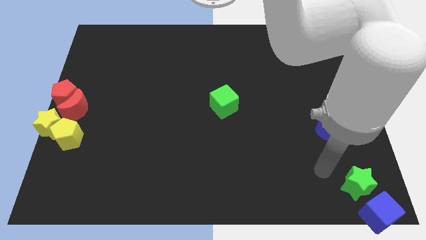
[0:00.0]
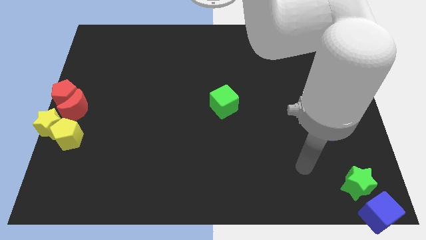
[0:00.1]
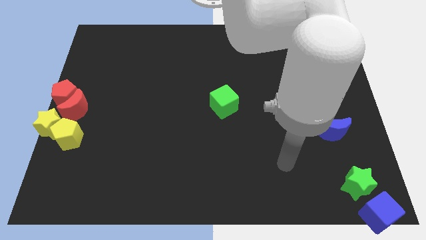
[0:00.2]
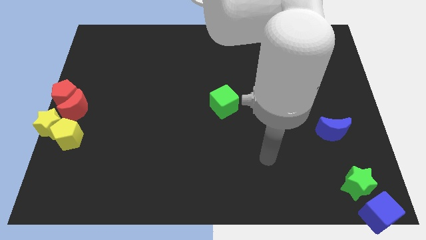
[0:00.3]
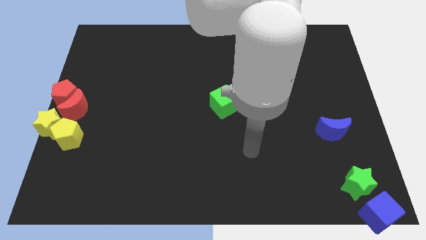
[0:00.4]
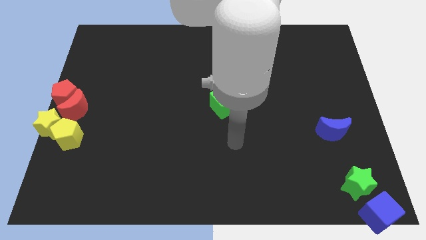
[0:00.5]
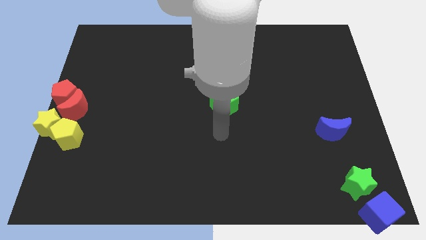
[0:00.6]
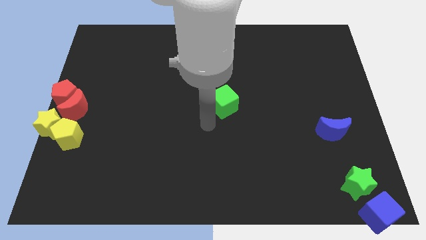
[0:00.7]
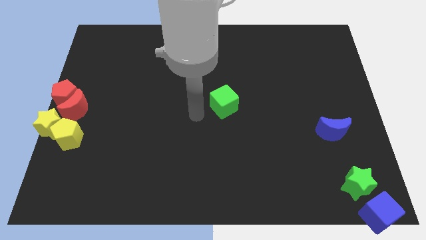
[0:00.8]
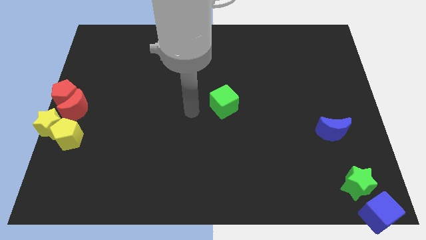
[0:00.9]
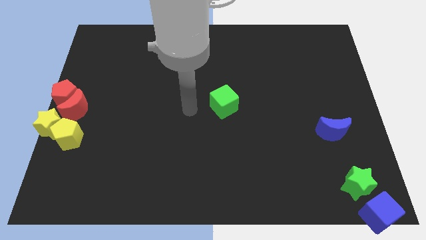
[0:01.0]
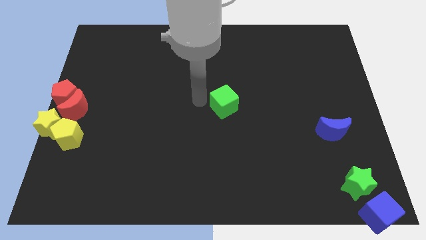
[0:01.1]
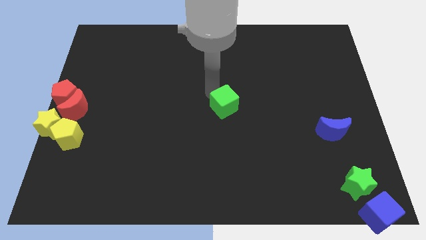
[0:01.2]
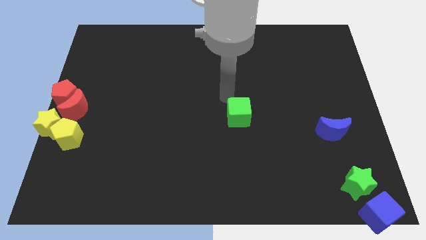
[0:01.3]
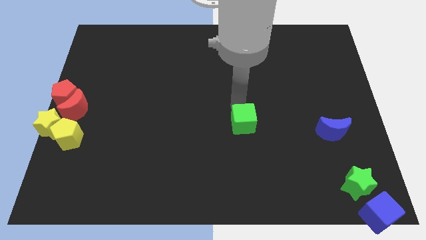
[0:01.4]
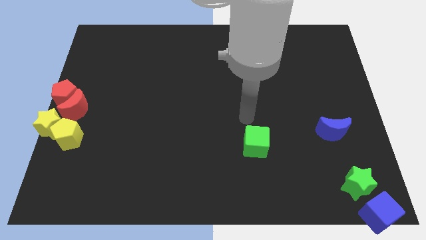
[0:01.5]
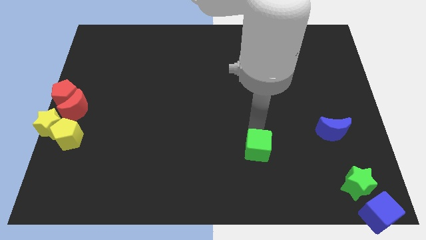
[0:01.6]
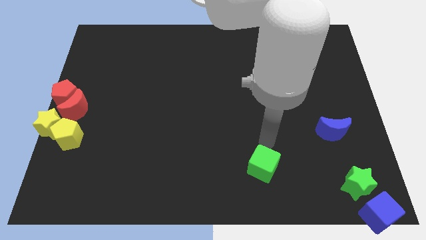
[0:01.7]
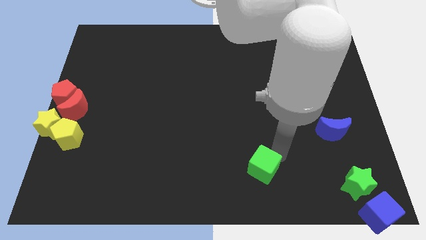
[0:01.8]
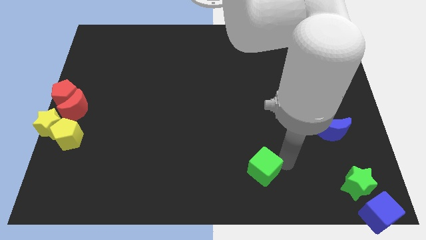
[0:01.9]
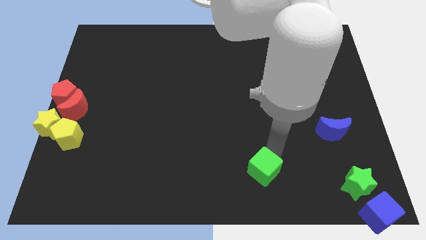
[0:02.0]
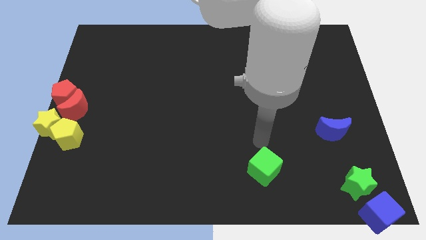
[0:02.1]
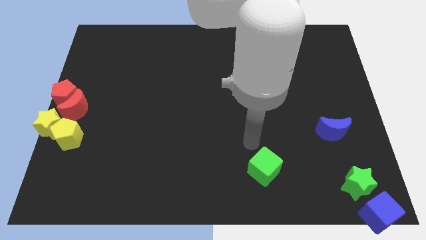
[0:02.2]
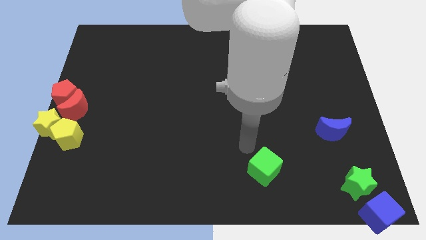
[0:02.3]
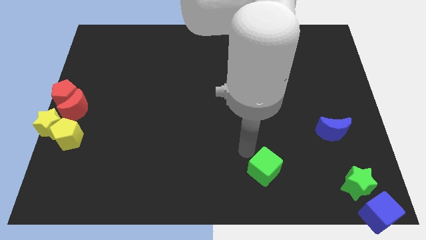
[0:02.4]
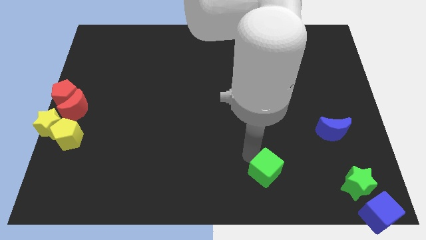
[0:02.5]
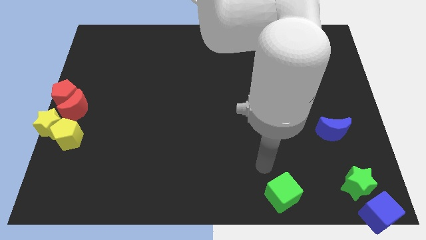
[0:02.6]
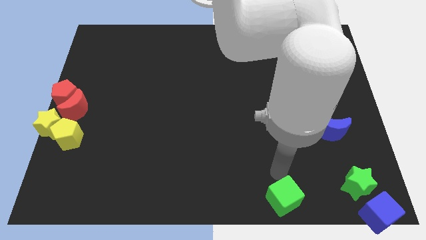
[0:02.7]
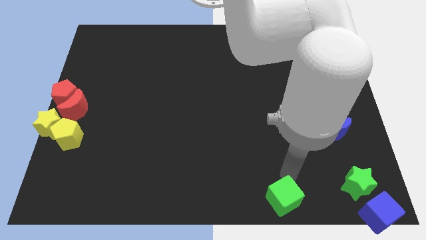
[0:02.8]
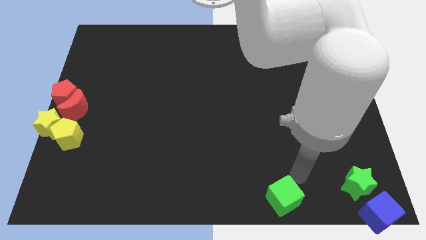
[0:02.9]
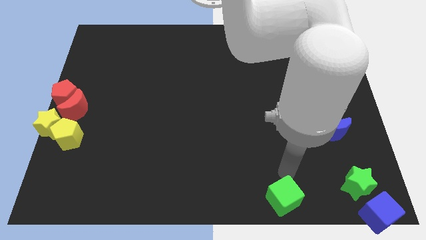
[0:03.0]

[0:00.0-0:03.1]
place the green cube to the left of the blue cube

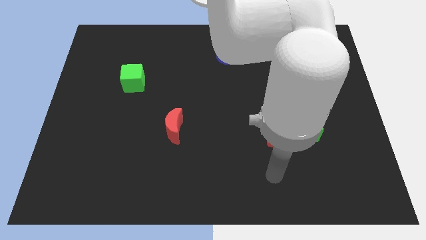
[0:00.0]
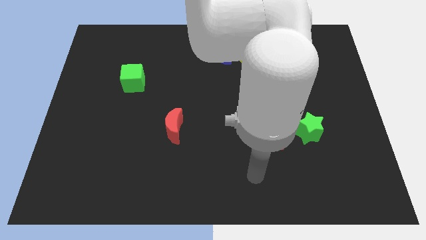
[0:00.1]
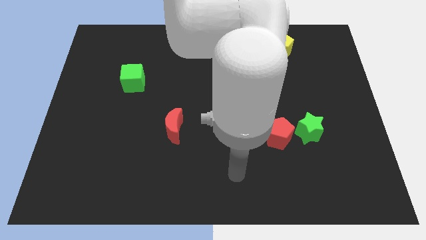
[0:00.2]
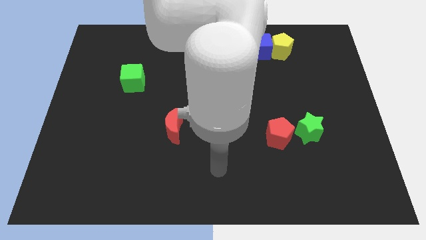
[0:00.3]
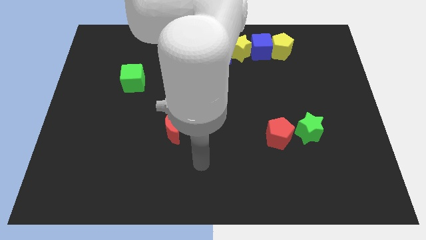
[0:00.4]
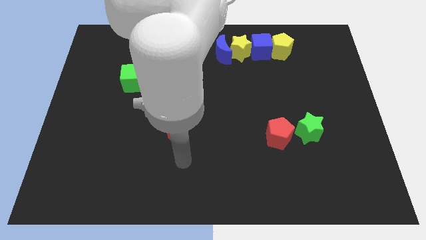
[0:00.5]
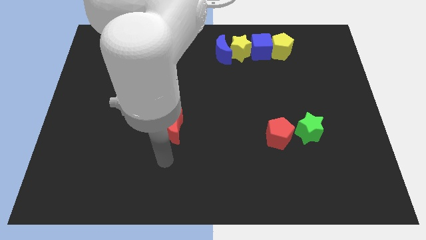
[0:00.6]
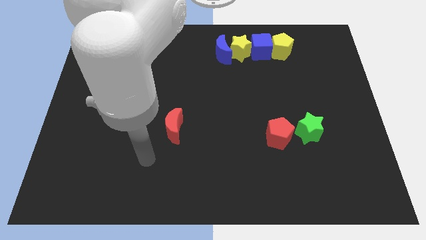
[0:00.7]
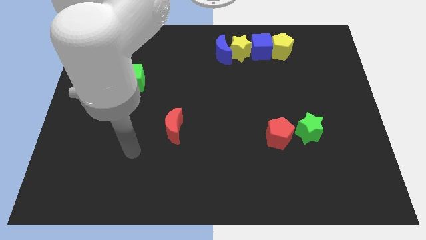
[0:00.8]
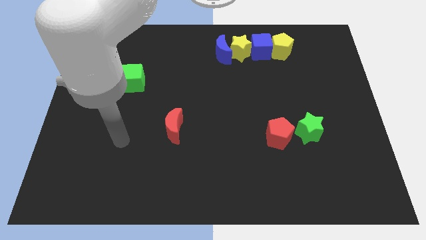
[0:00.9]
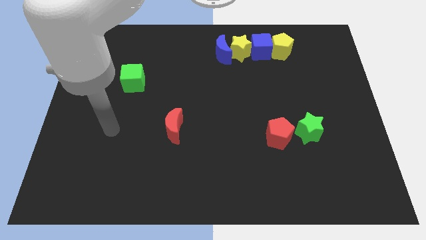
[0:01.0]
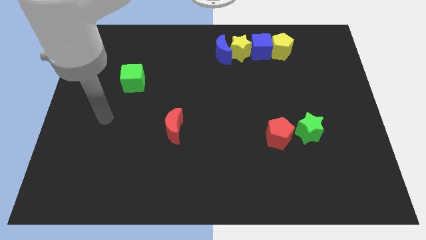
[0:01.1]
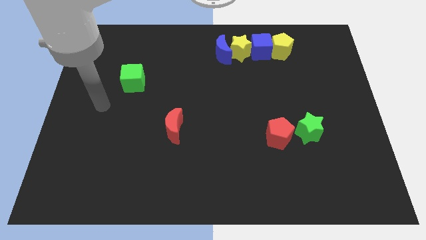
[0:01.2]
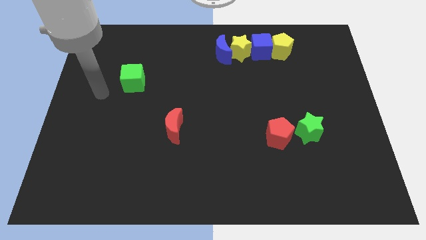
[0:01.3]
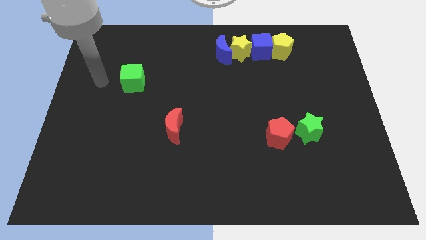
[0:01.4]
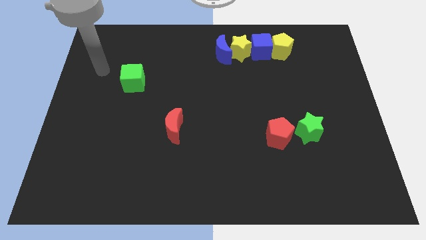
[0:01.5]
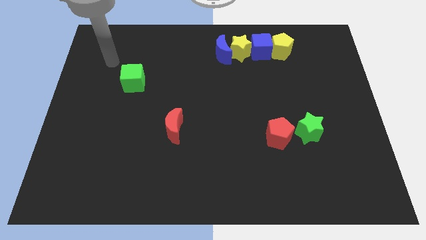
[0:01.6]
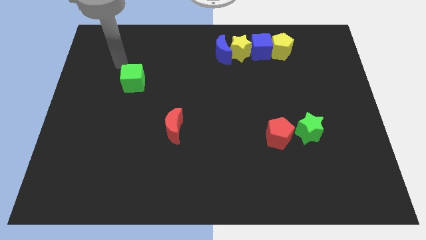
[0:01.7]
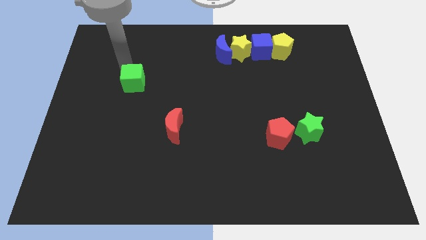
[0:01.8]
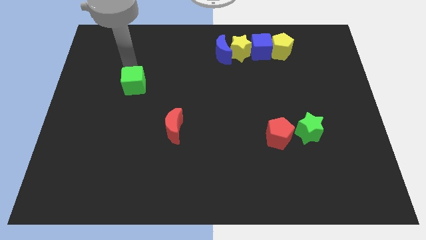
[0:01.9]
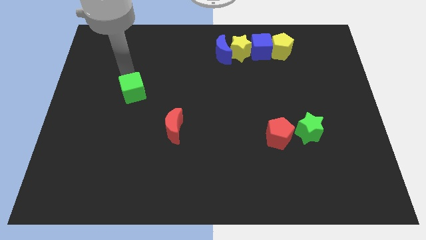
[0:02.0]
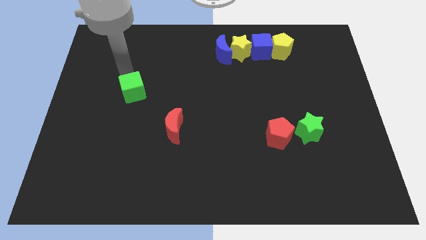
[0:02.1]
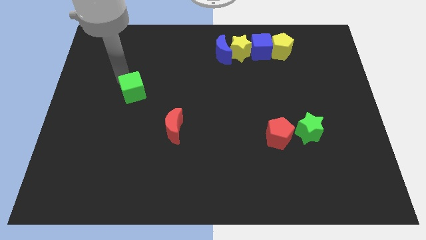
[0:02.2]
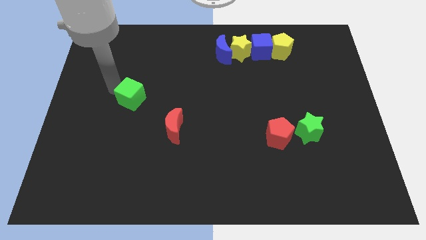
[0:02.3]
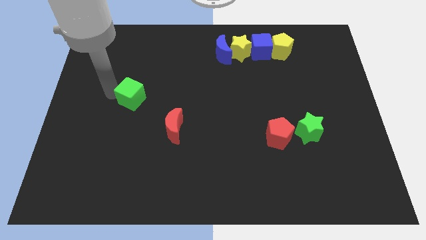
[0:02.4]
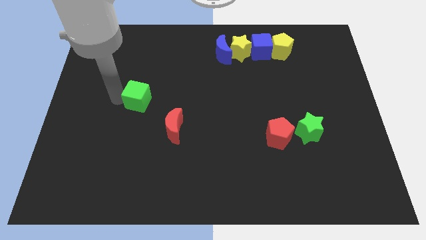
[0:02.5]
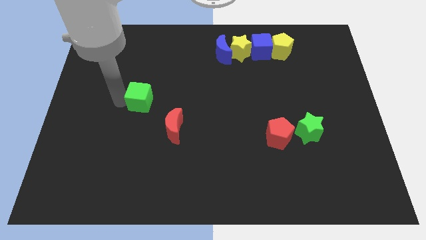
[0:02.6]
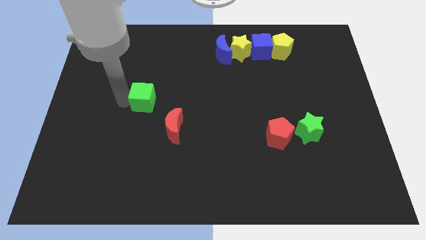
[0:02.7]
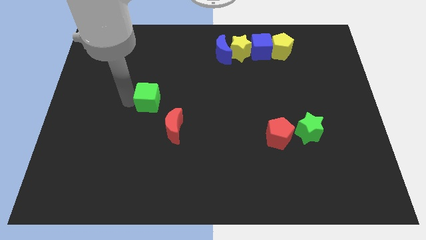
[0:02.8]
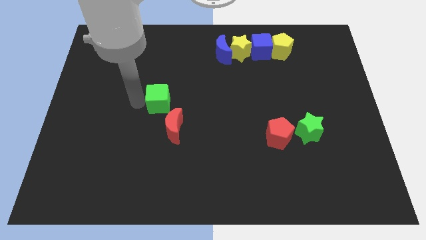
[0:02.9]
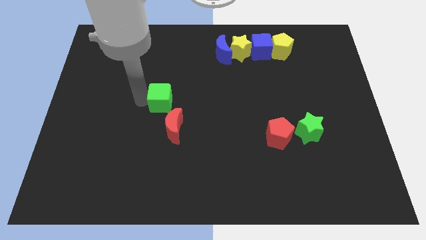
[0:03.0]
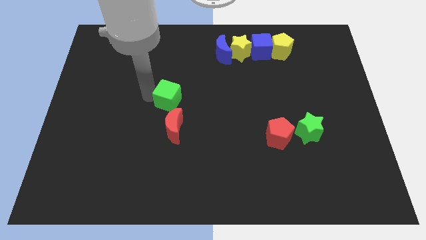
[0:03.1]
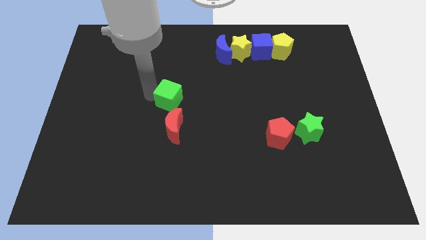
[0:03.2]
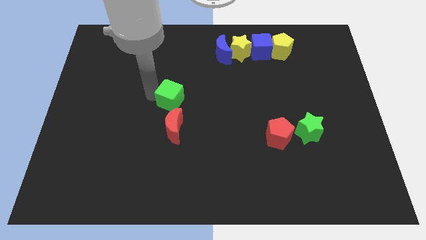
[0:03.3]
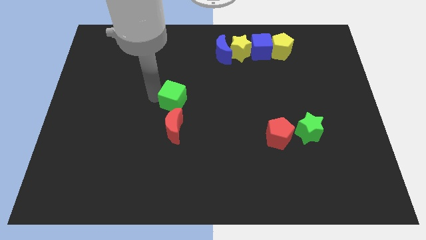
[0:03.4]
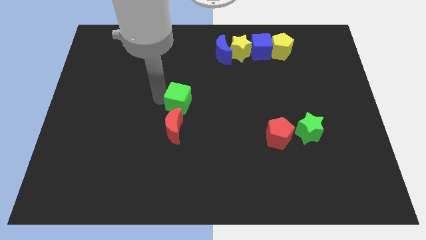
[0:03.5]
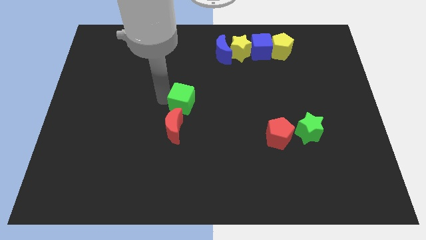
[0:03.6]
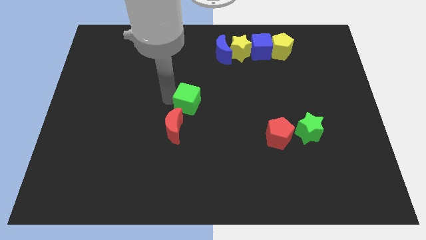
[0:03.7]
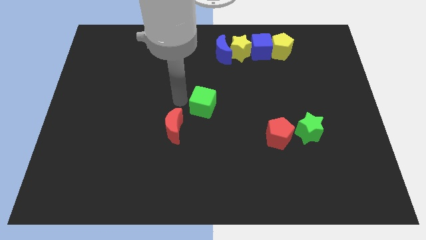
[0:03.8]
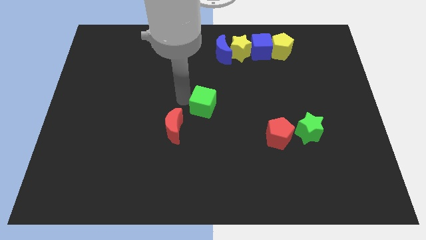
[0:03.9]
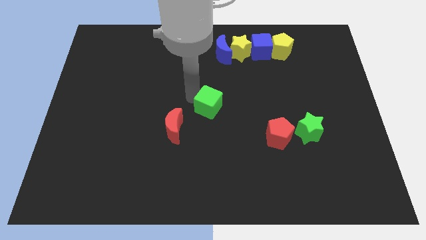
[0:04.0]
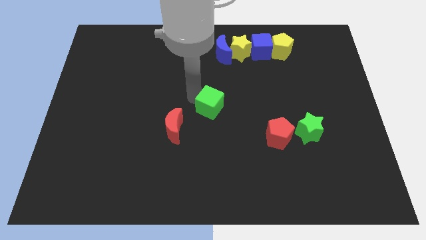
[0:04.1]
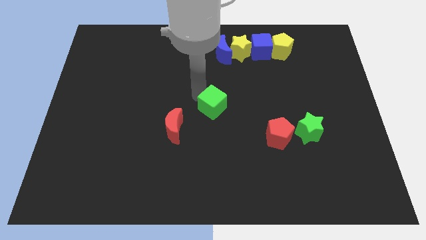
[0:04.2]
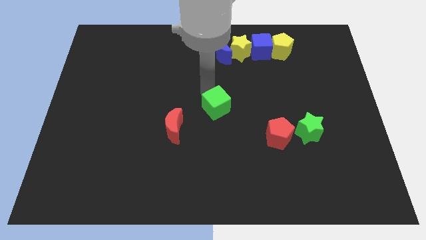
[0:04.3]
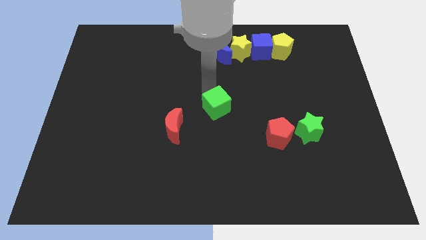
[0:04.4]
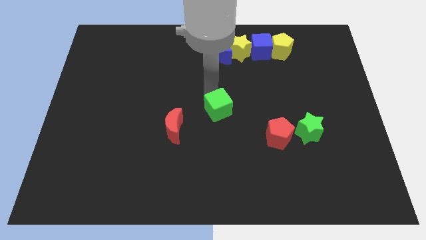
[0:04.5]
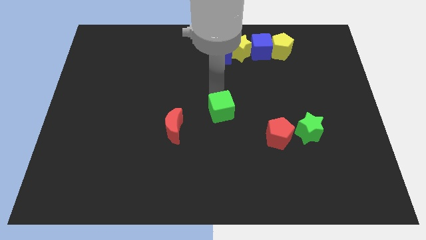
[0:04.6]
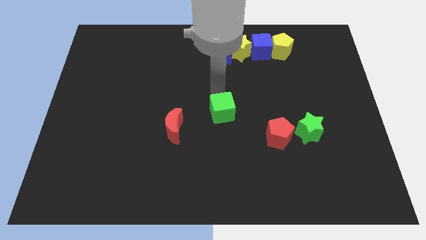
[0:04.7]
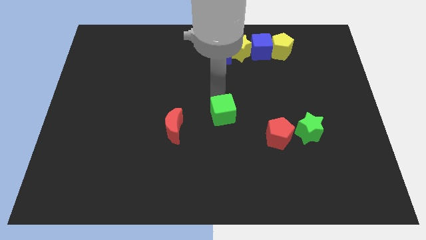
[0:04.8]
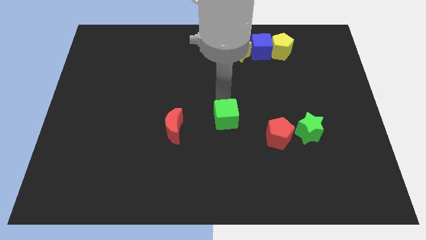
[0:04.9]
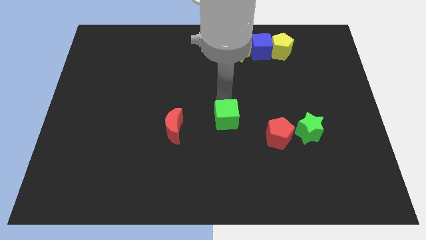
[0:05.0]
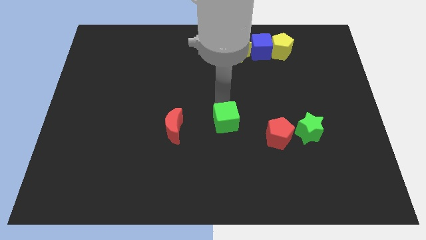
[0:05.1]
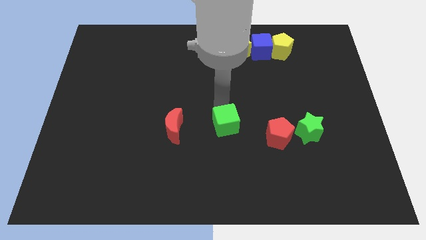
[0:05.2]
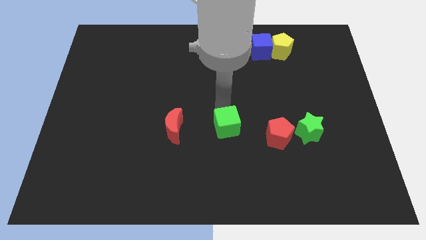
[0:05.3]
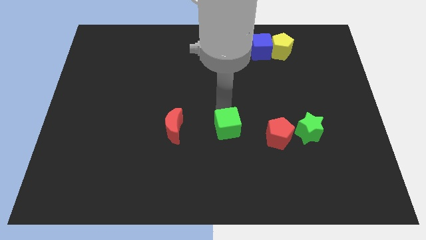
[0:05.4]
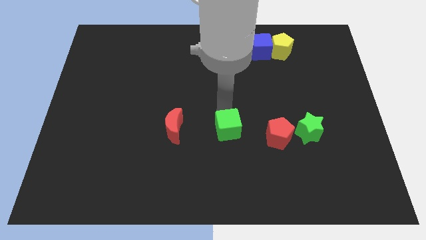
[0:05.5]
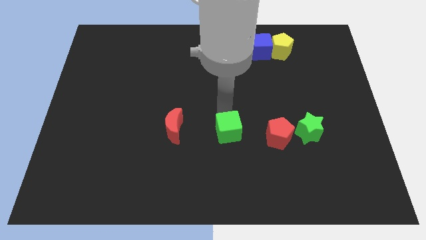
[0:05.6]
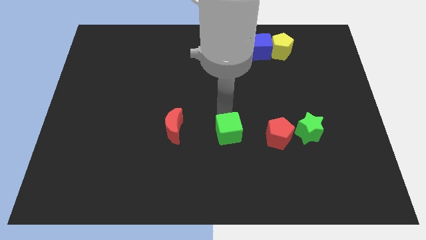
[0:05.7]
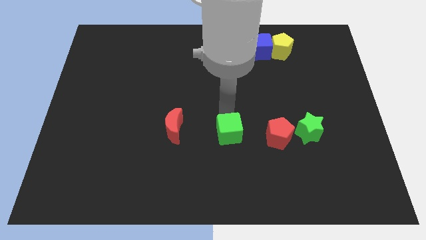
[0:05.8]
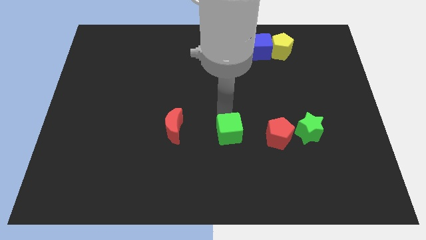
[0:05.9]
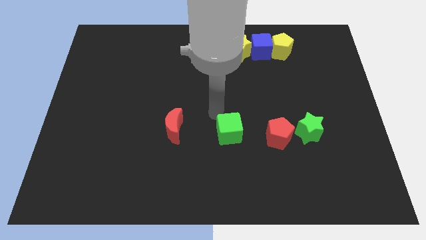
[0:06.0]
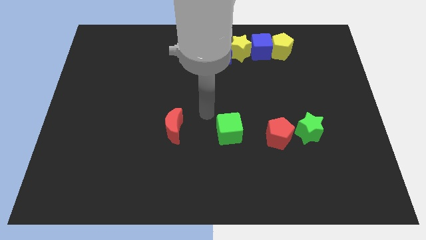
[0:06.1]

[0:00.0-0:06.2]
place the green cube in between the red pentagon and red crescent
